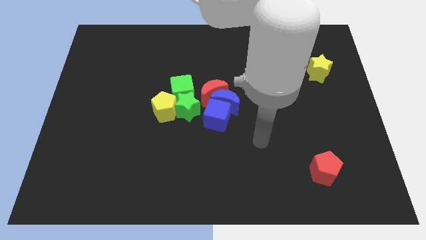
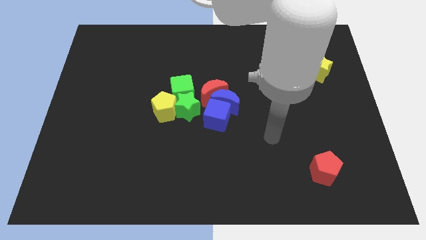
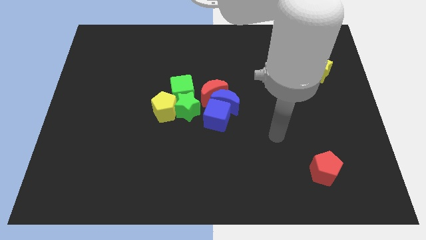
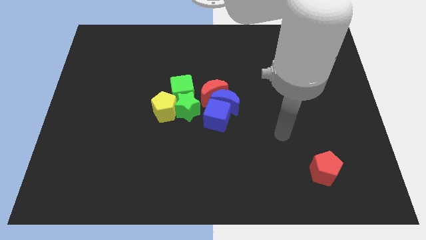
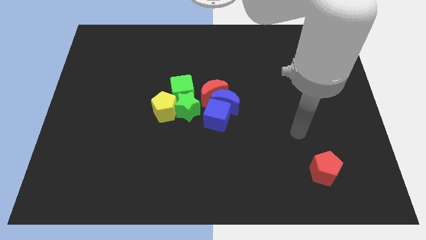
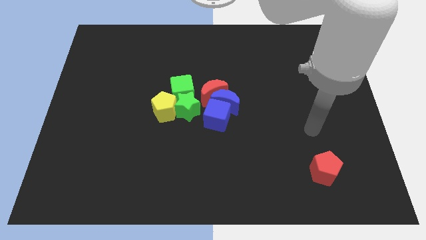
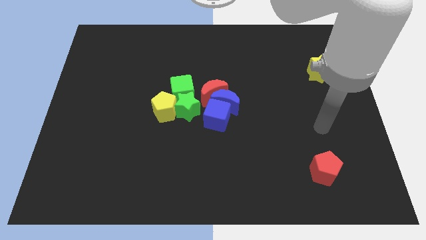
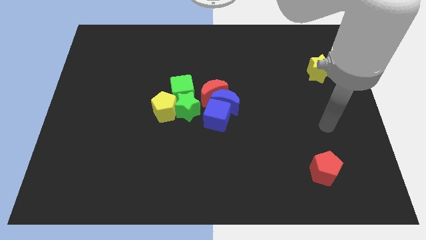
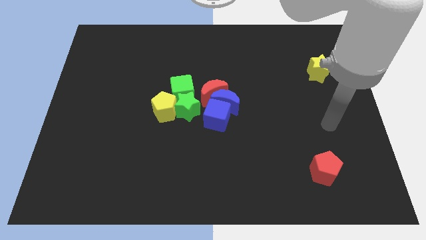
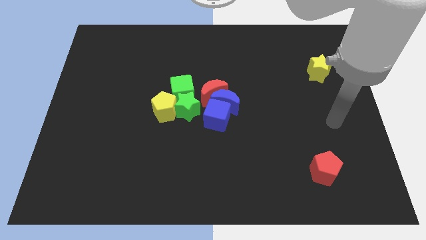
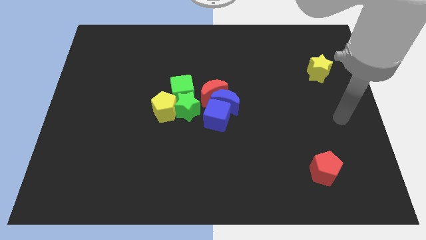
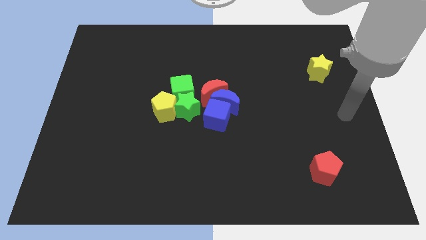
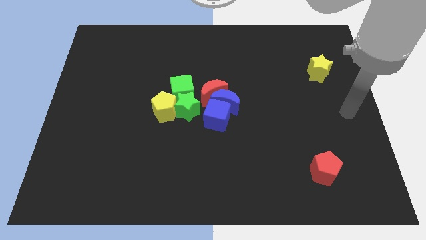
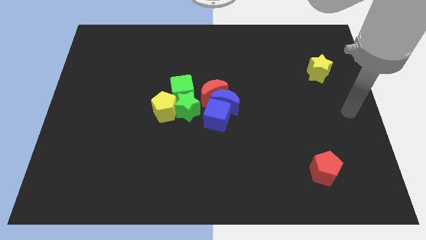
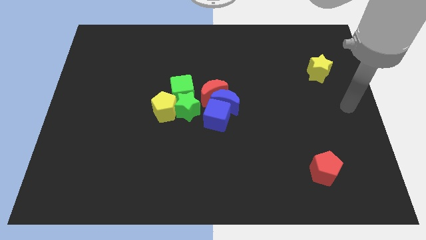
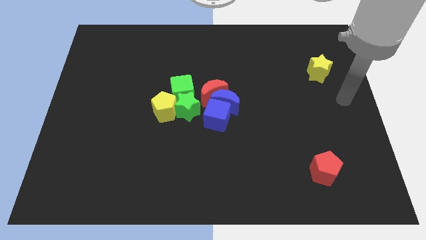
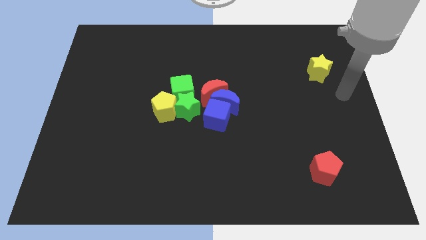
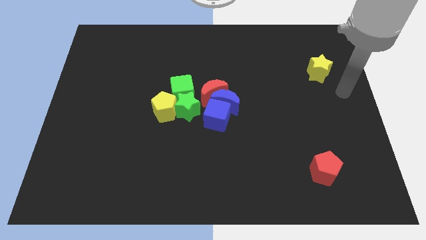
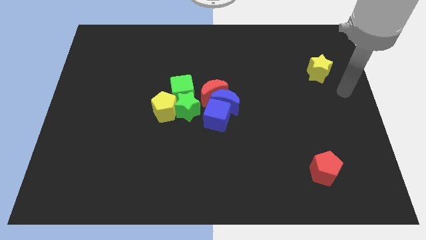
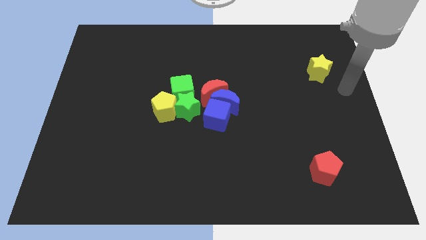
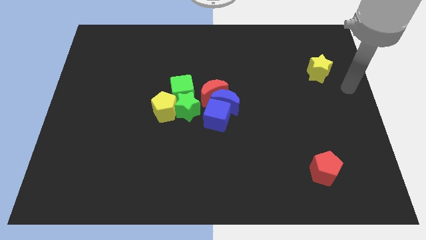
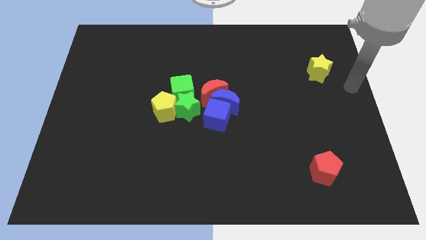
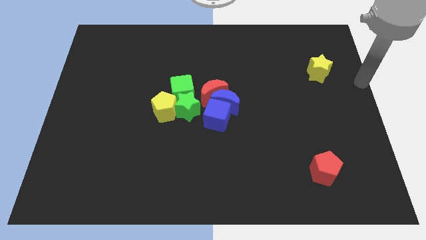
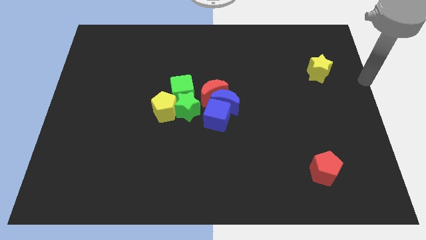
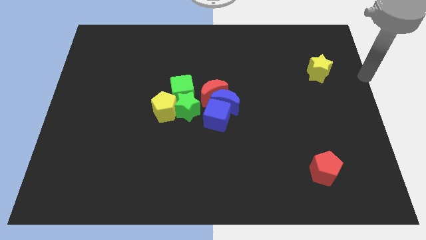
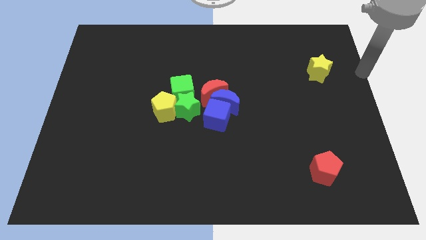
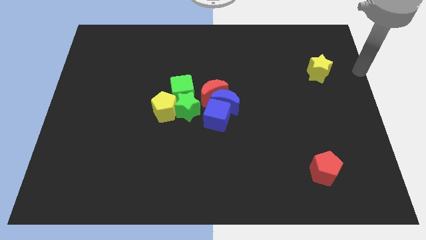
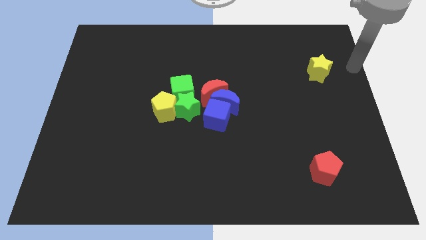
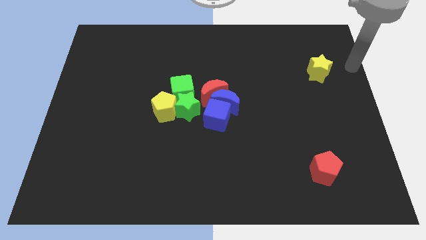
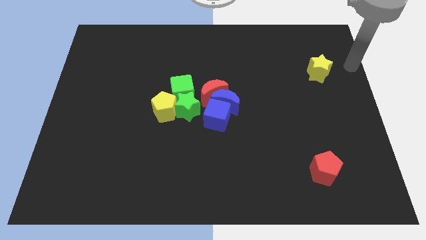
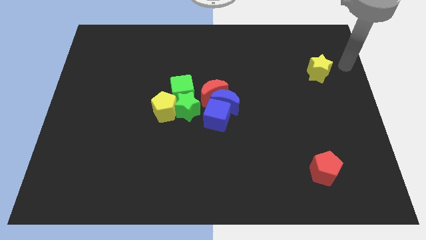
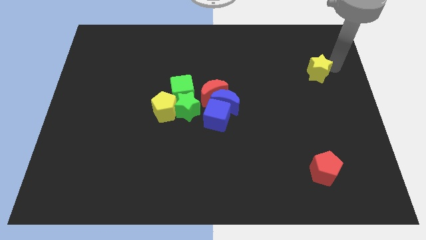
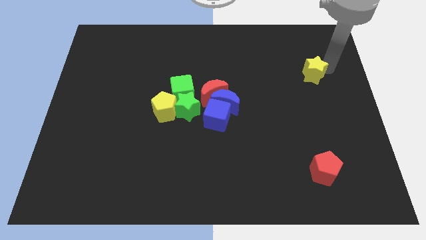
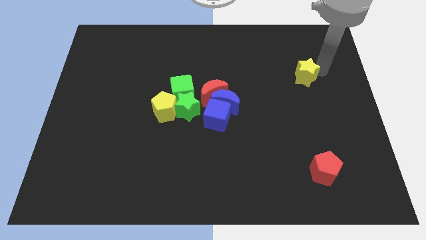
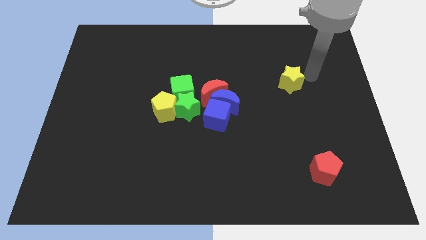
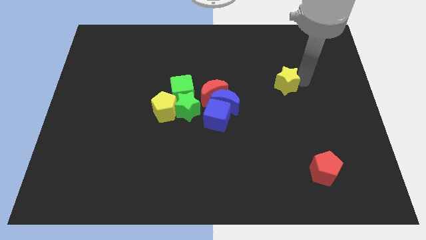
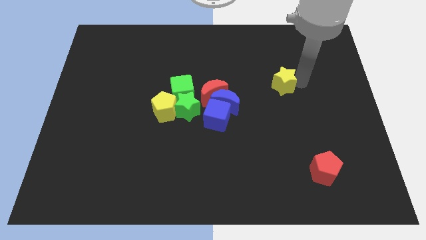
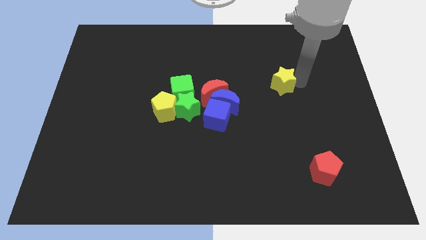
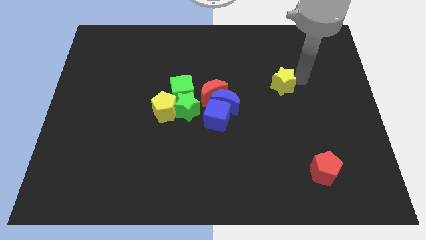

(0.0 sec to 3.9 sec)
push the yellow star towards the center of the board

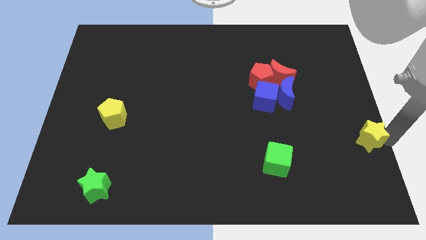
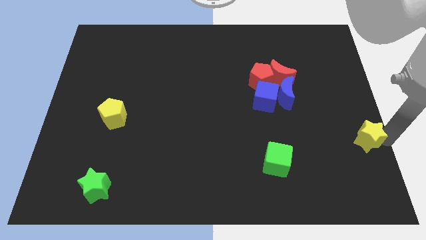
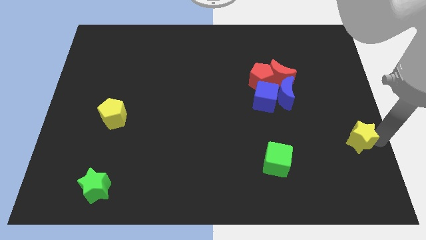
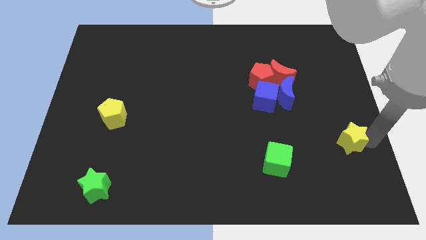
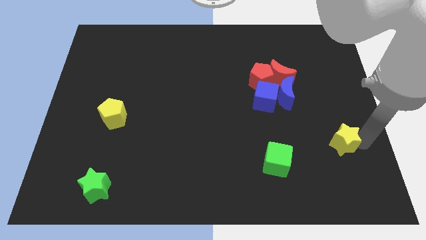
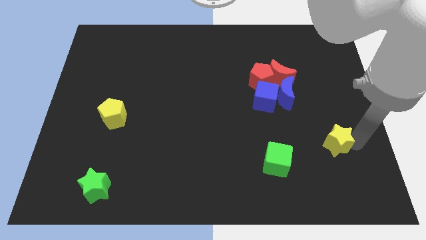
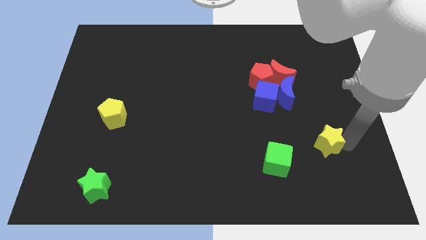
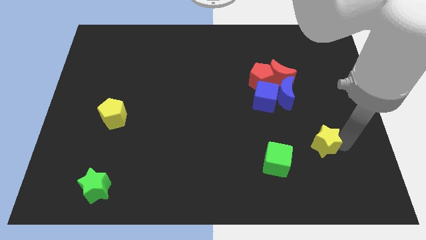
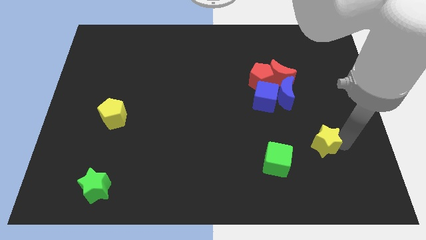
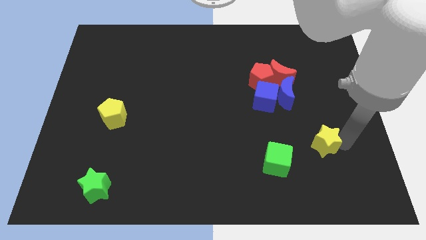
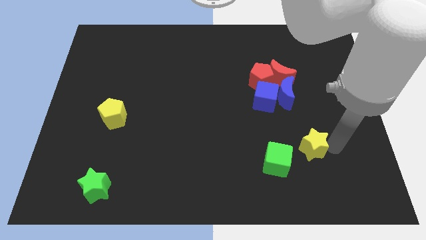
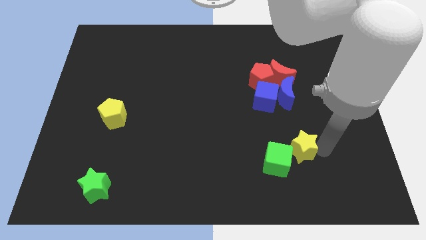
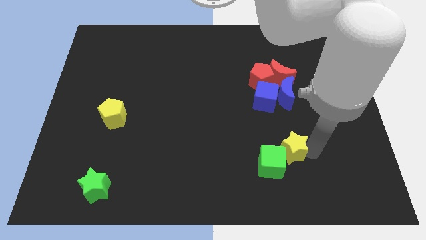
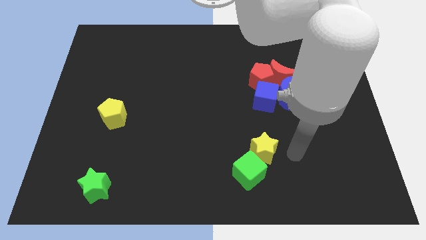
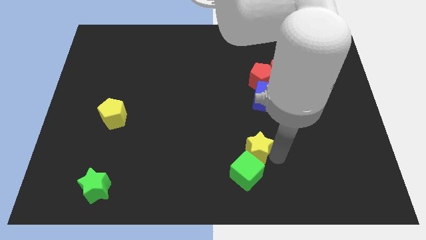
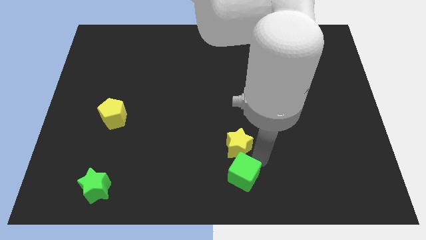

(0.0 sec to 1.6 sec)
bring the yellow star at the top side of the green cube

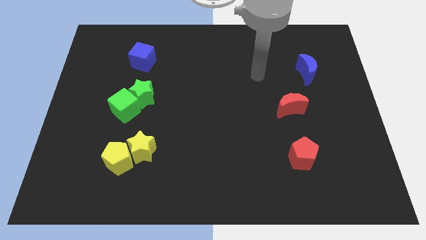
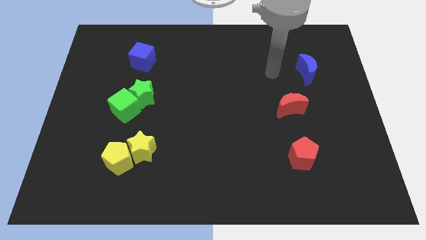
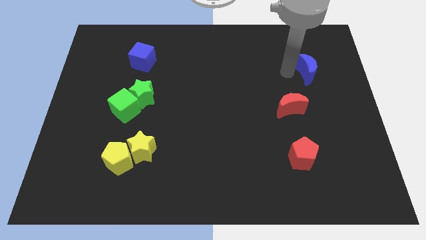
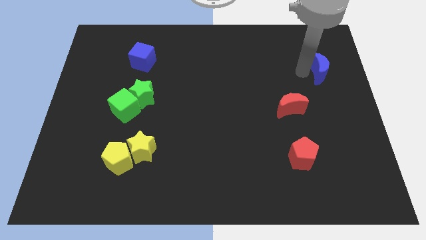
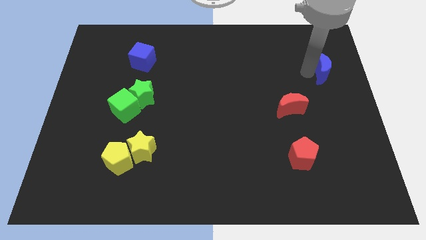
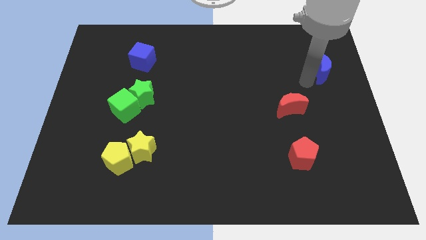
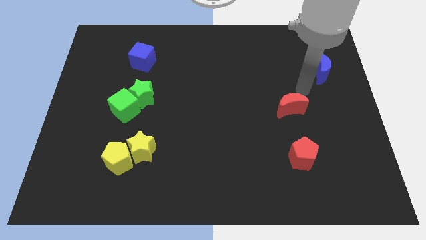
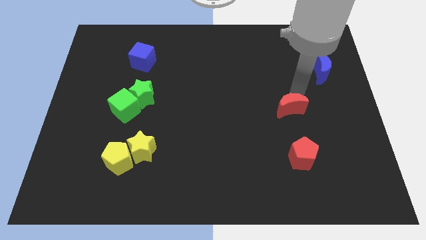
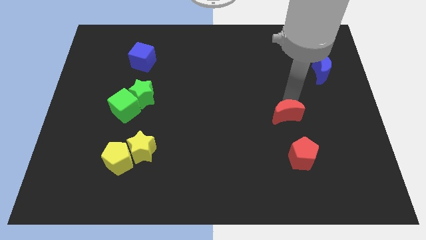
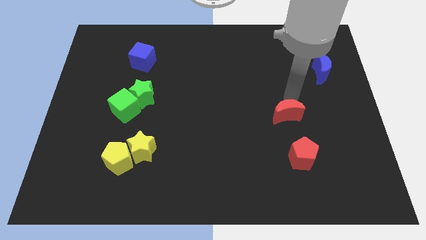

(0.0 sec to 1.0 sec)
push the blue moon towards right

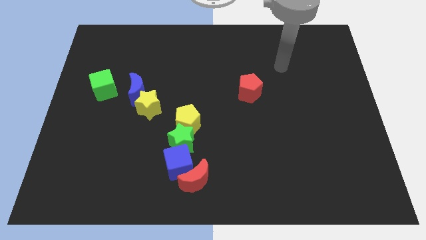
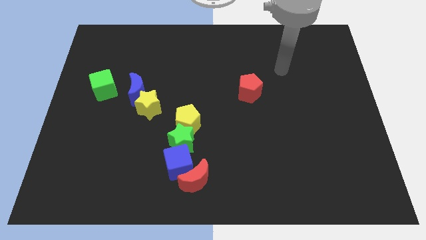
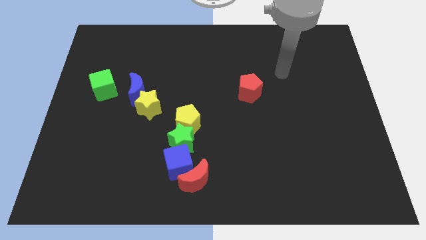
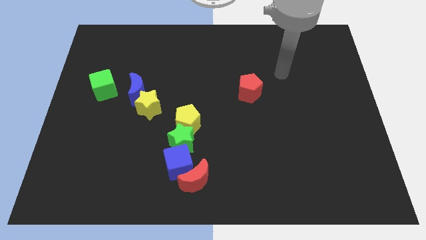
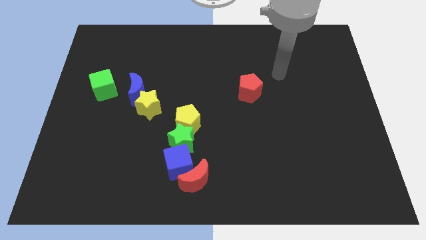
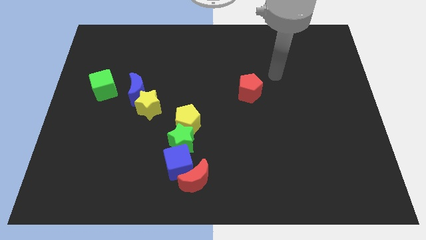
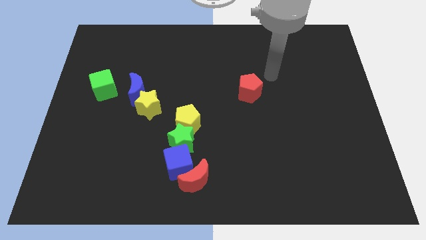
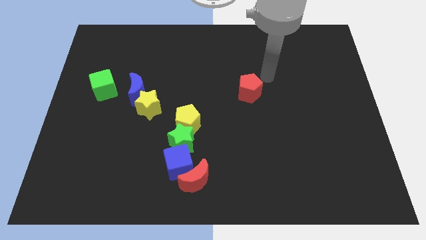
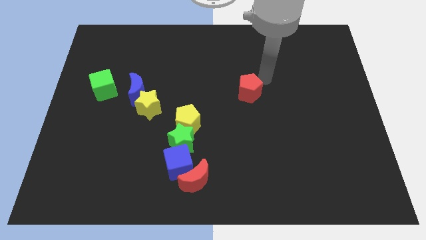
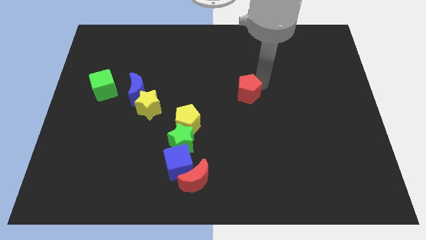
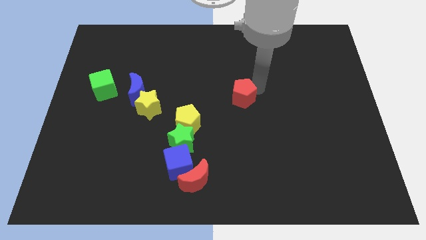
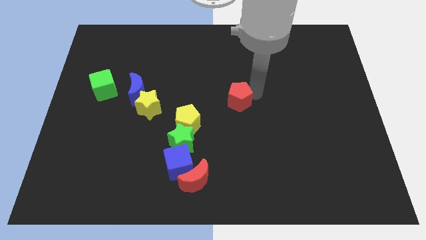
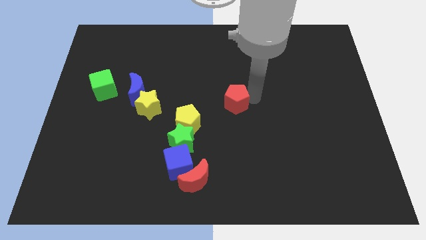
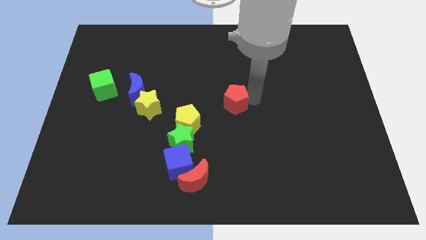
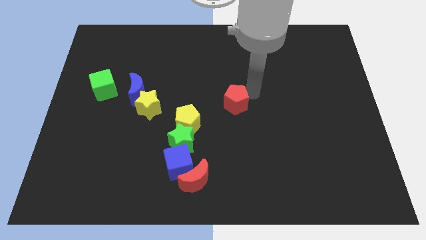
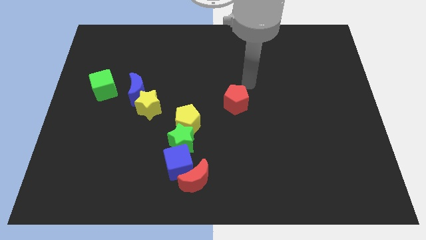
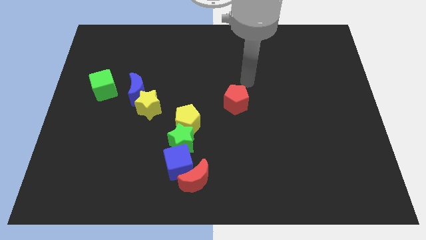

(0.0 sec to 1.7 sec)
slightly push the red pentagon towards the center of the board

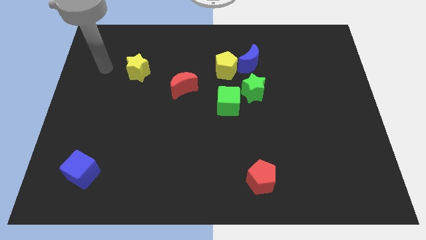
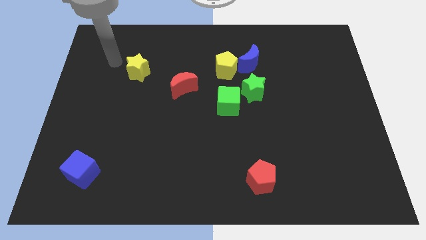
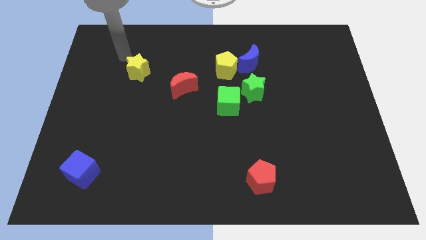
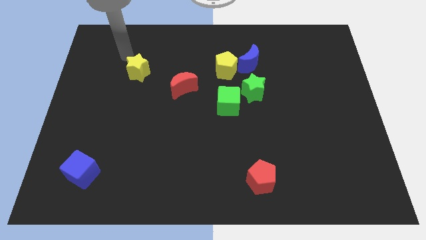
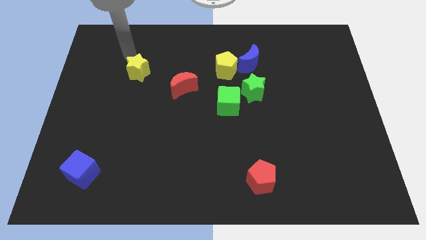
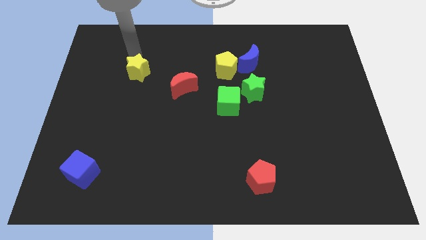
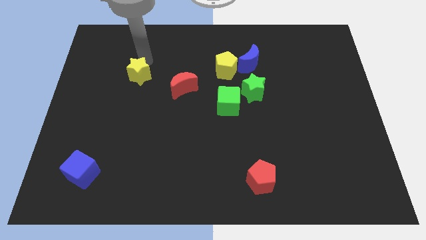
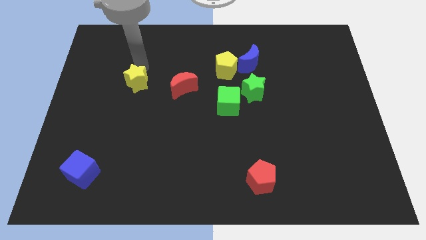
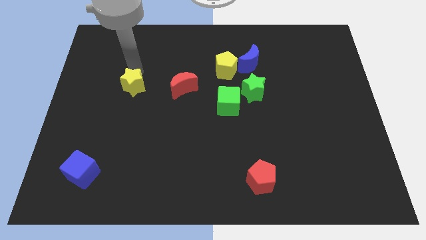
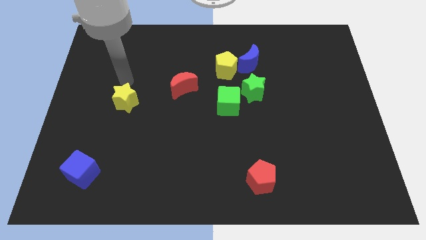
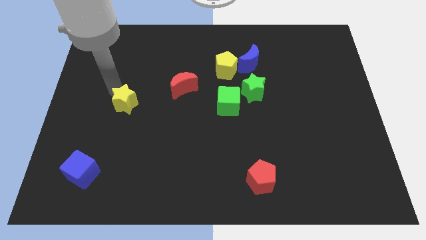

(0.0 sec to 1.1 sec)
place the yellow star slightly downwards
